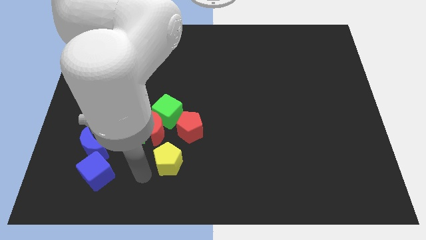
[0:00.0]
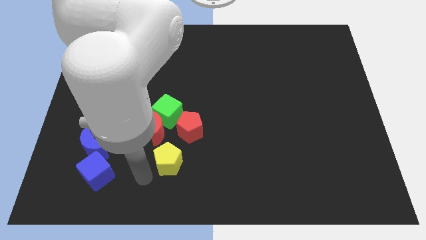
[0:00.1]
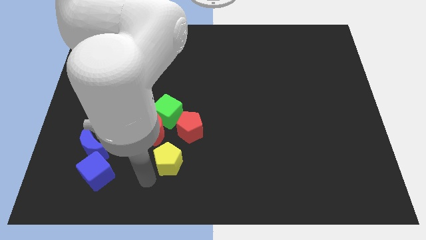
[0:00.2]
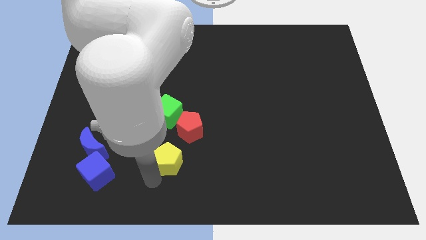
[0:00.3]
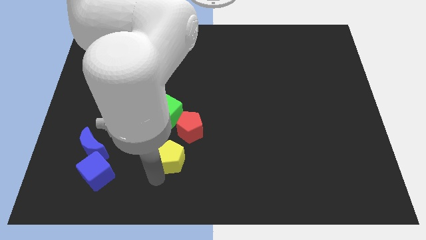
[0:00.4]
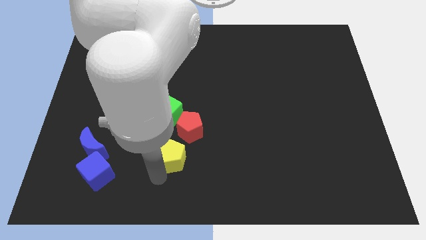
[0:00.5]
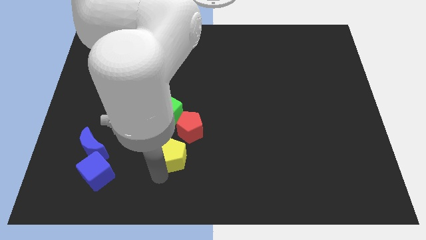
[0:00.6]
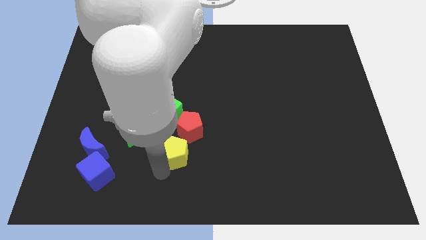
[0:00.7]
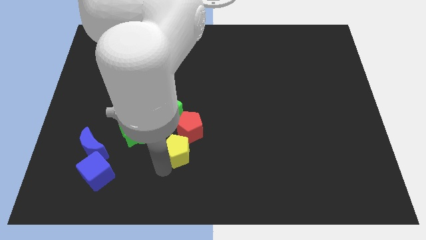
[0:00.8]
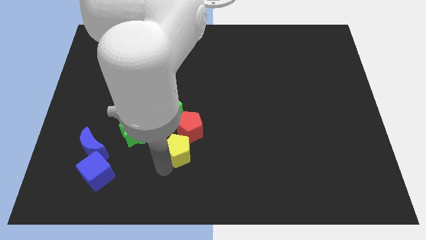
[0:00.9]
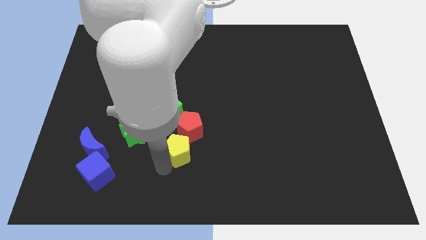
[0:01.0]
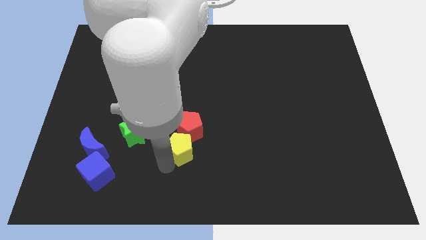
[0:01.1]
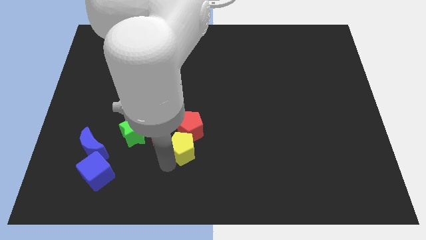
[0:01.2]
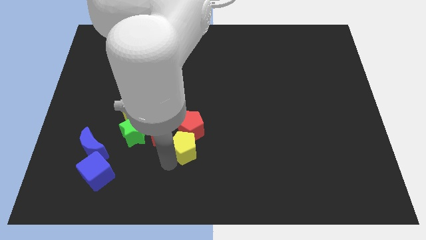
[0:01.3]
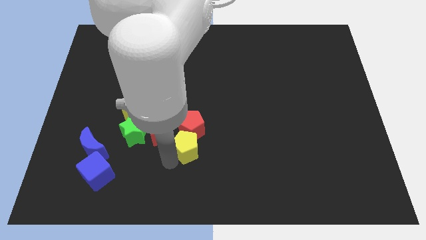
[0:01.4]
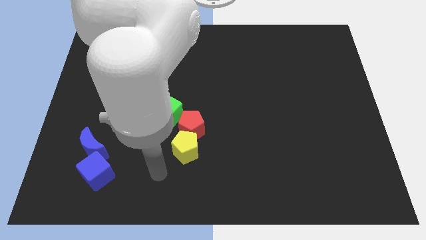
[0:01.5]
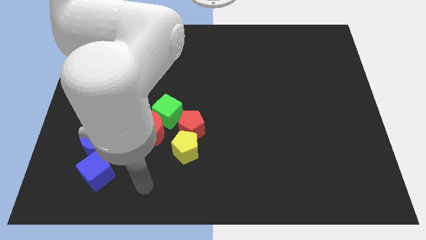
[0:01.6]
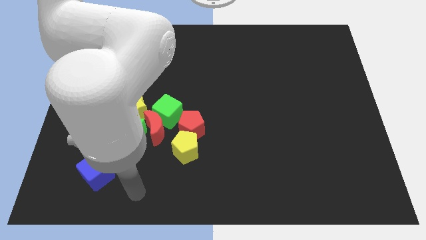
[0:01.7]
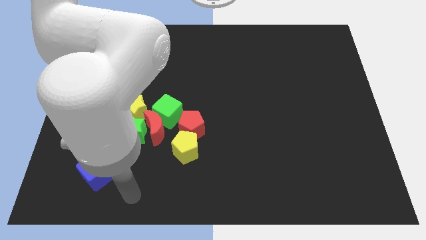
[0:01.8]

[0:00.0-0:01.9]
push the yellow pentagon into the red pentagon

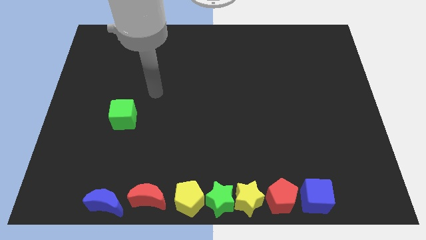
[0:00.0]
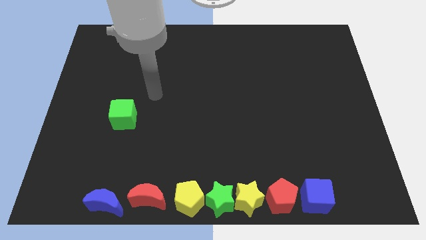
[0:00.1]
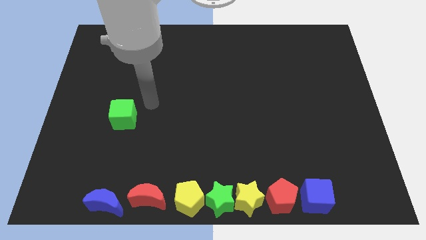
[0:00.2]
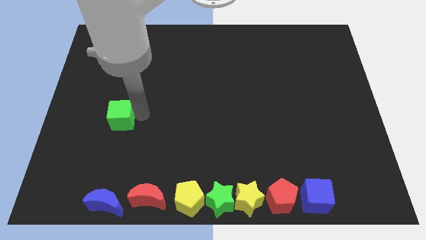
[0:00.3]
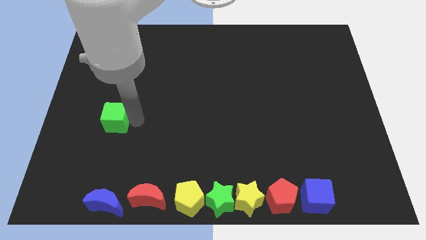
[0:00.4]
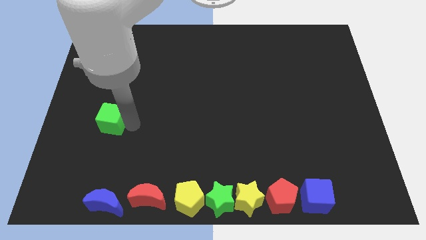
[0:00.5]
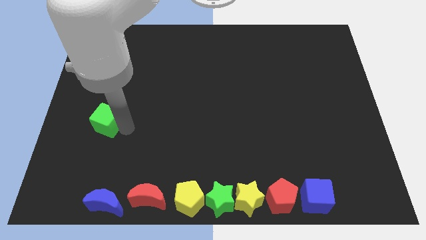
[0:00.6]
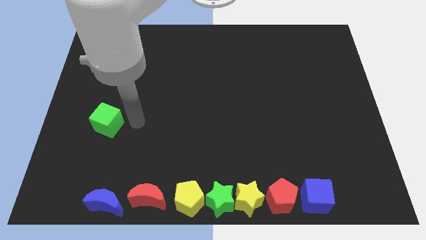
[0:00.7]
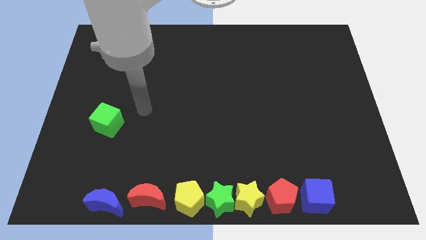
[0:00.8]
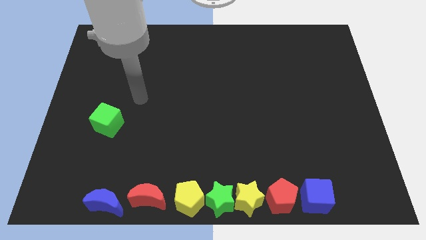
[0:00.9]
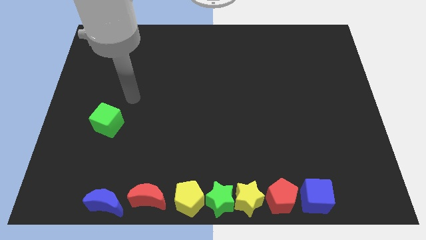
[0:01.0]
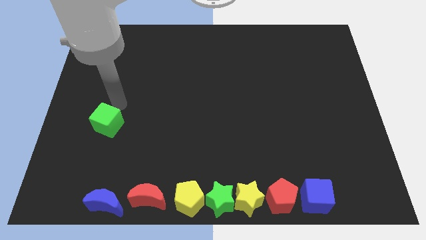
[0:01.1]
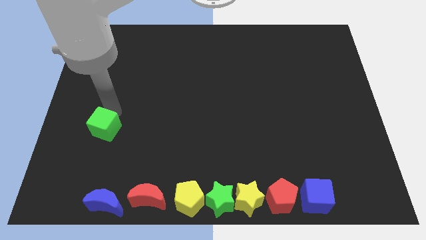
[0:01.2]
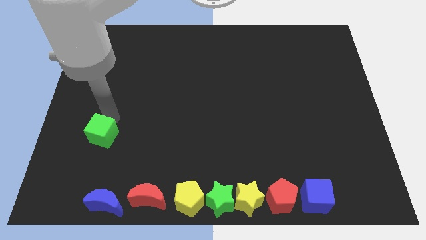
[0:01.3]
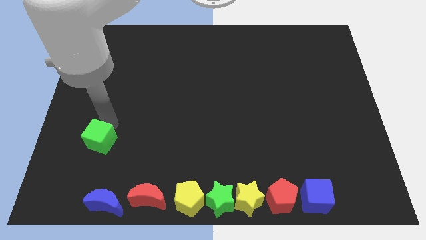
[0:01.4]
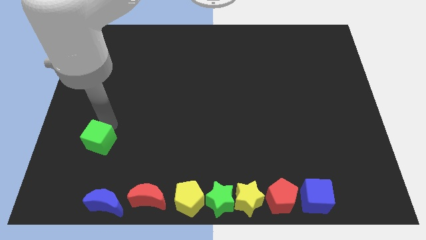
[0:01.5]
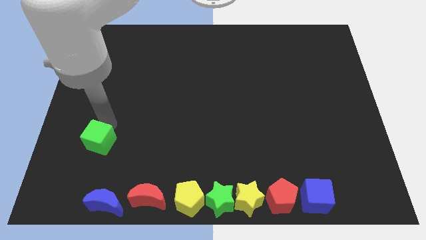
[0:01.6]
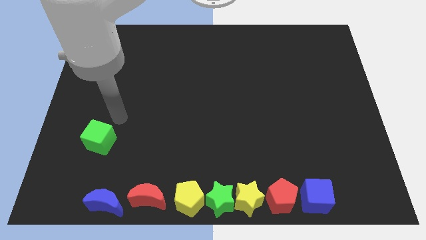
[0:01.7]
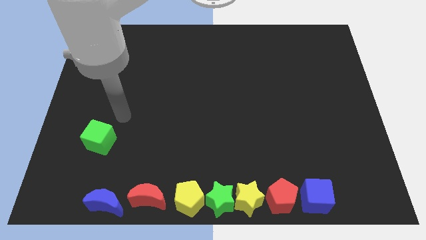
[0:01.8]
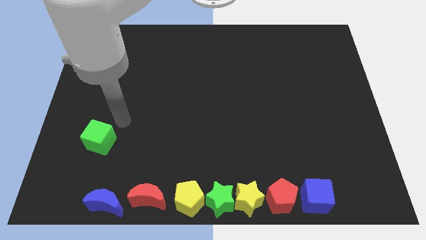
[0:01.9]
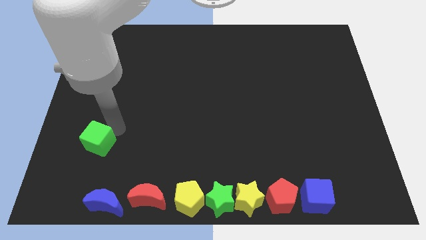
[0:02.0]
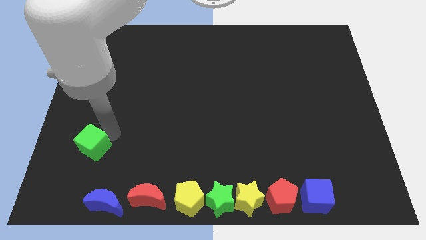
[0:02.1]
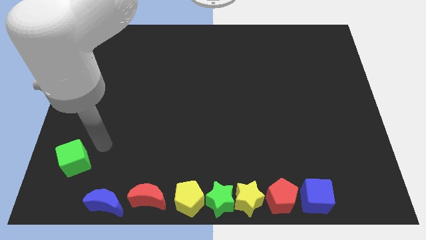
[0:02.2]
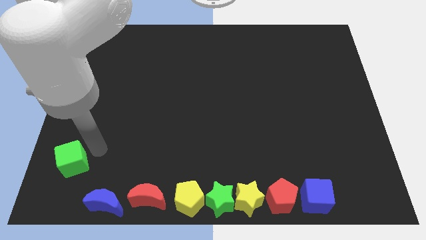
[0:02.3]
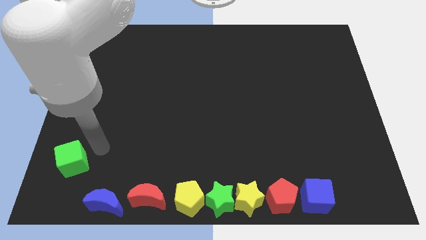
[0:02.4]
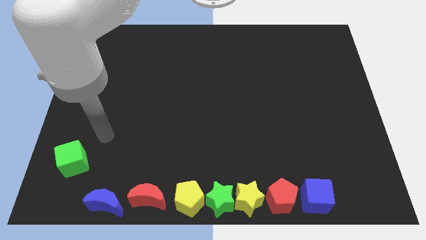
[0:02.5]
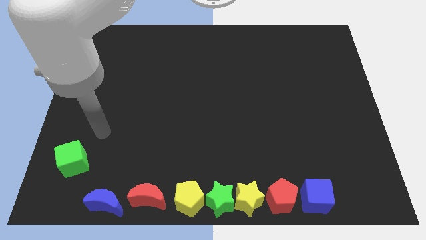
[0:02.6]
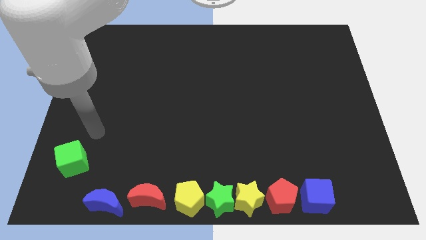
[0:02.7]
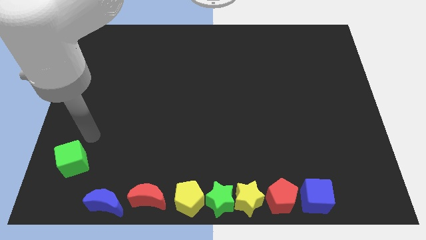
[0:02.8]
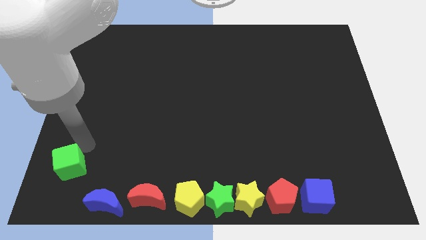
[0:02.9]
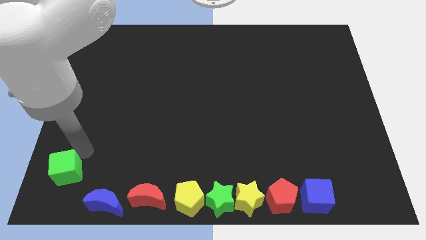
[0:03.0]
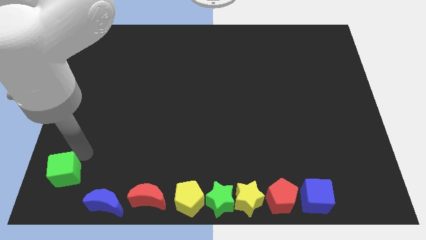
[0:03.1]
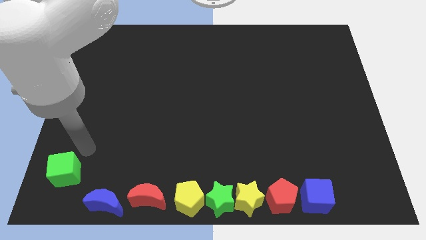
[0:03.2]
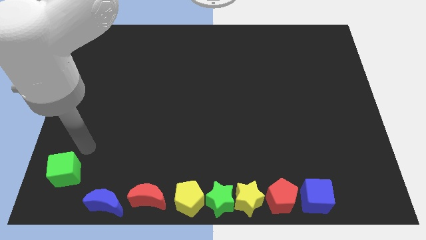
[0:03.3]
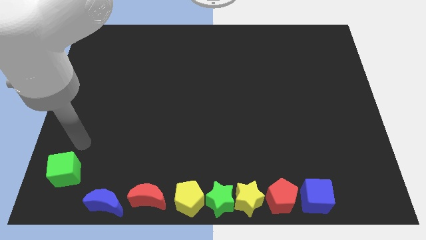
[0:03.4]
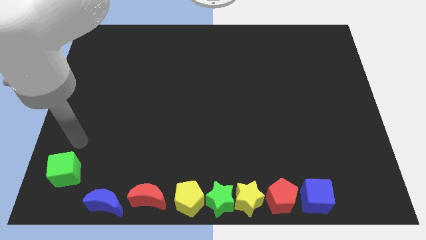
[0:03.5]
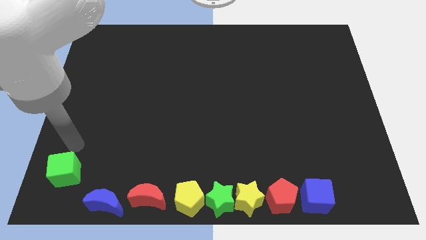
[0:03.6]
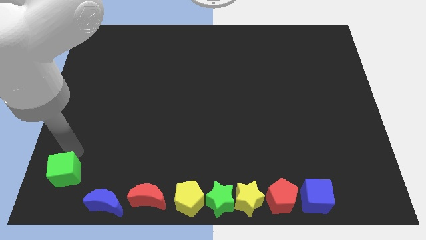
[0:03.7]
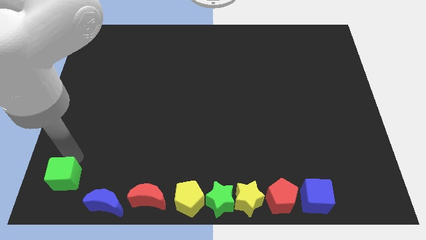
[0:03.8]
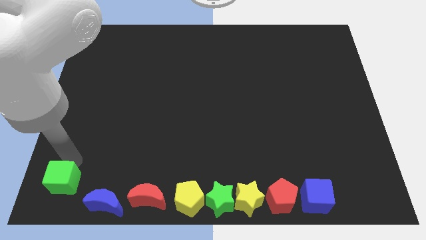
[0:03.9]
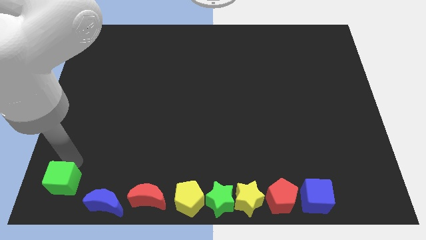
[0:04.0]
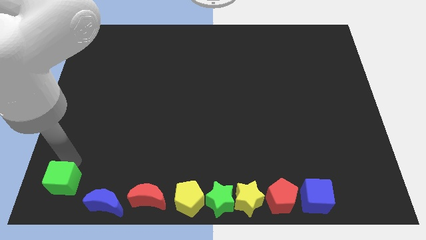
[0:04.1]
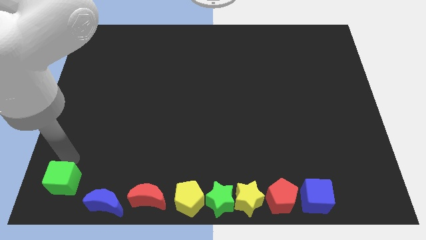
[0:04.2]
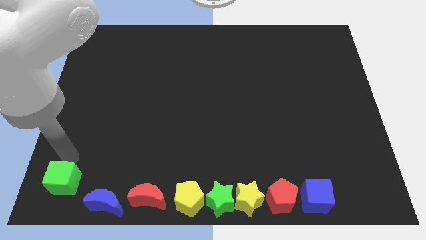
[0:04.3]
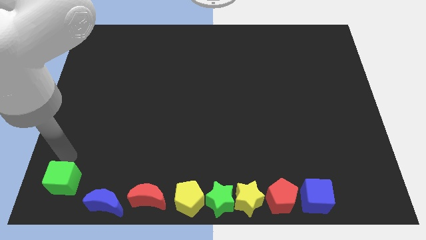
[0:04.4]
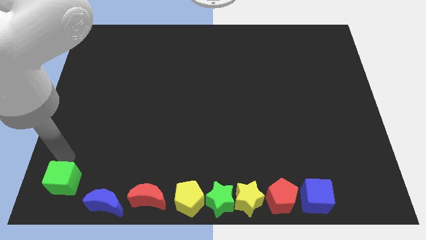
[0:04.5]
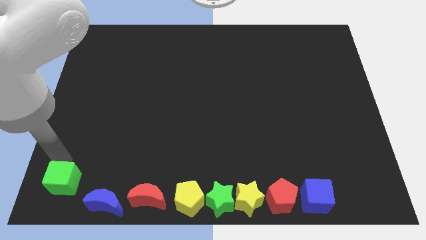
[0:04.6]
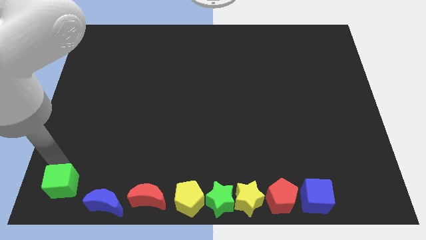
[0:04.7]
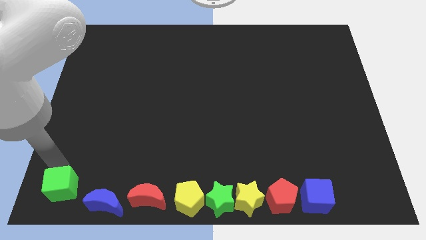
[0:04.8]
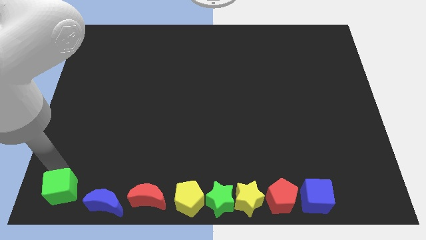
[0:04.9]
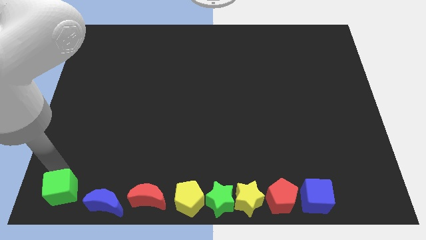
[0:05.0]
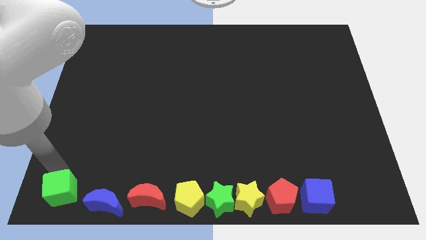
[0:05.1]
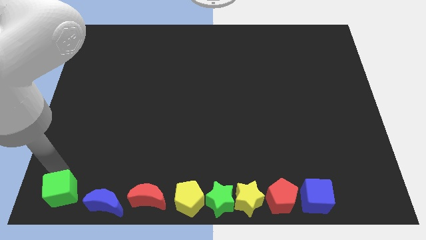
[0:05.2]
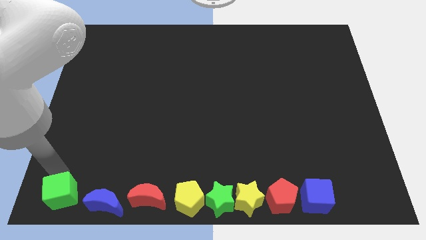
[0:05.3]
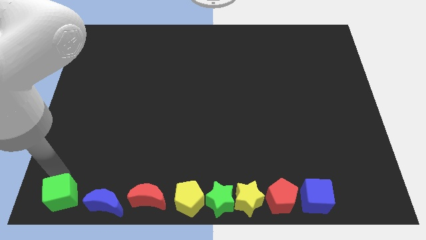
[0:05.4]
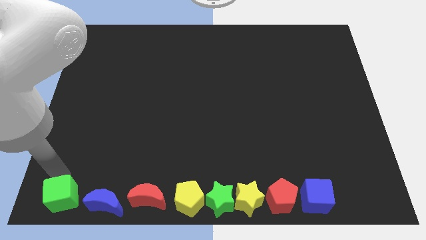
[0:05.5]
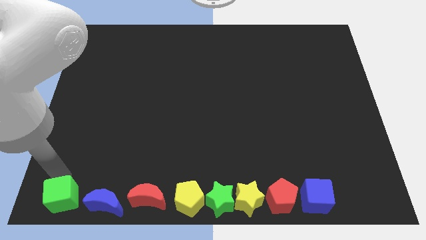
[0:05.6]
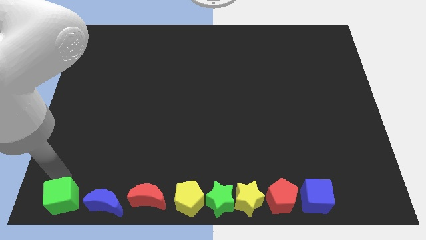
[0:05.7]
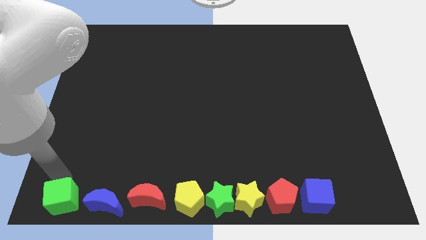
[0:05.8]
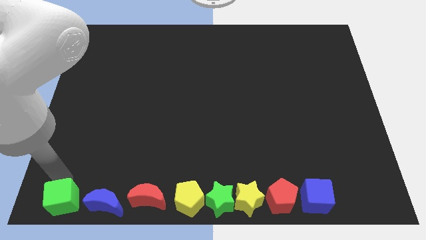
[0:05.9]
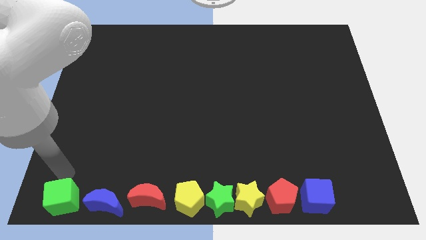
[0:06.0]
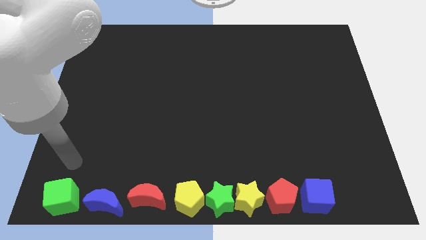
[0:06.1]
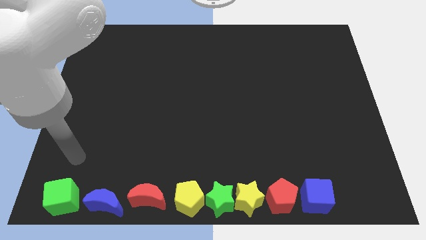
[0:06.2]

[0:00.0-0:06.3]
move the green cube bottom left corner of the board

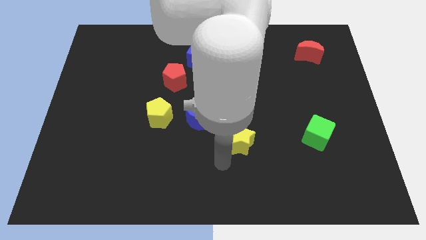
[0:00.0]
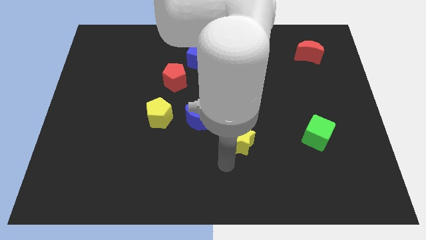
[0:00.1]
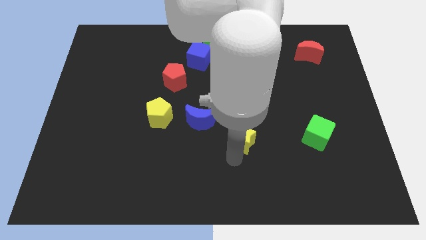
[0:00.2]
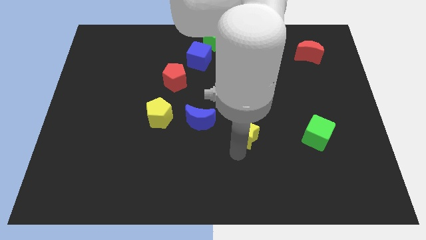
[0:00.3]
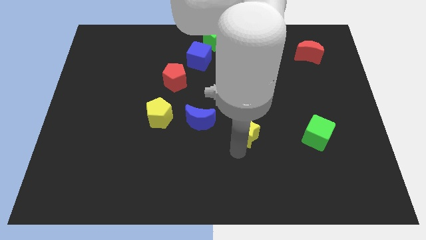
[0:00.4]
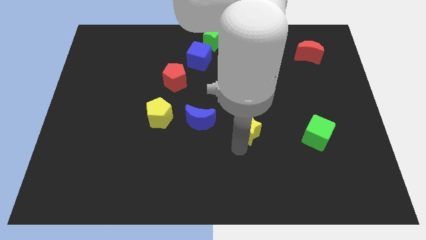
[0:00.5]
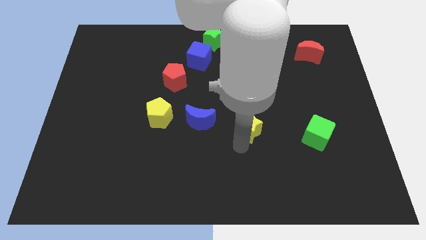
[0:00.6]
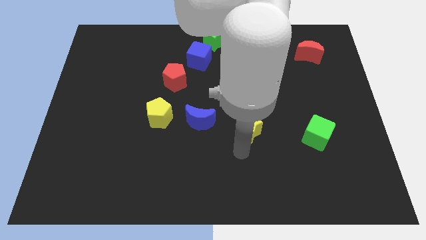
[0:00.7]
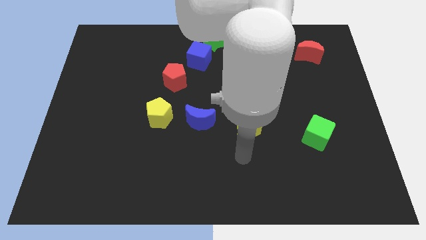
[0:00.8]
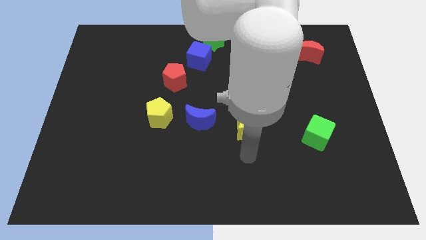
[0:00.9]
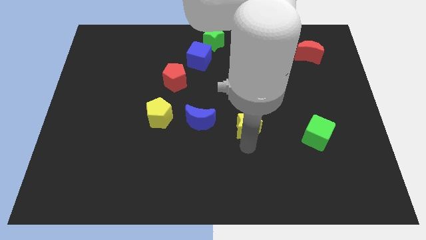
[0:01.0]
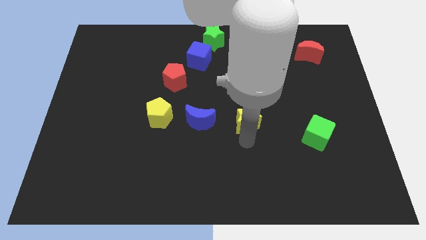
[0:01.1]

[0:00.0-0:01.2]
push the yellow star in between the green cube and the blue moon
